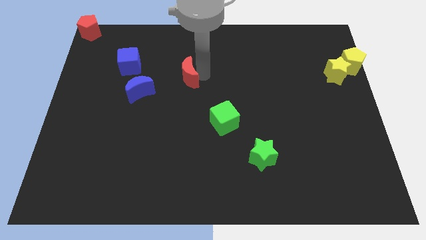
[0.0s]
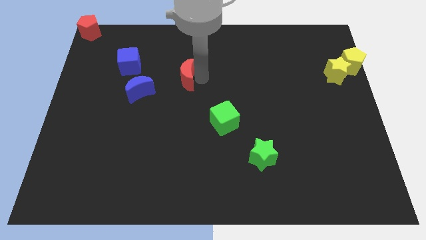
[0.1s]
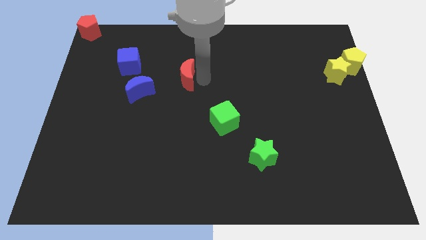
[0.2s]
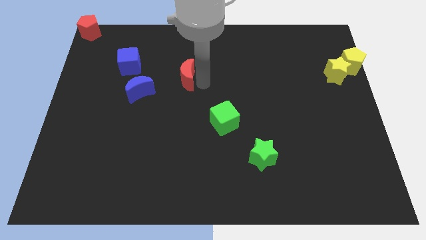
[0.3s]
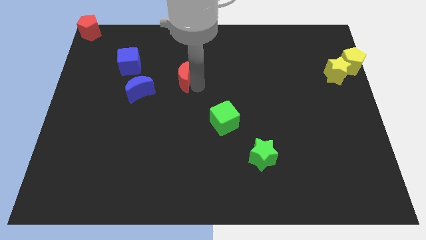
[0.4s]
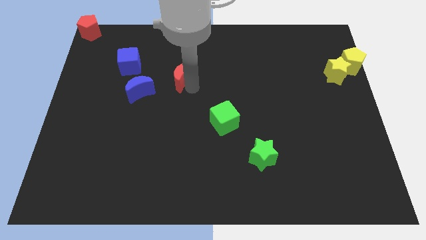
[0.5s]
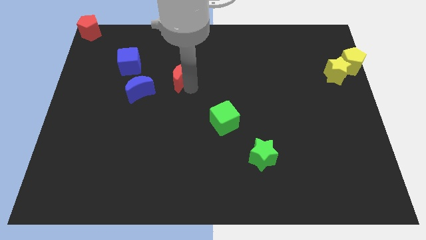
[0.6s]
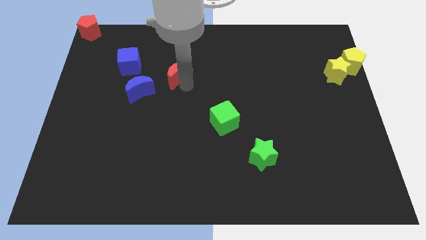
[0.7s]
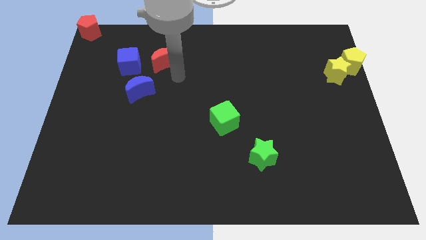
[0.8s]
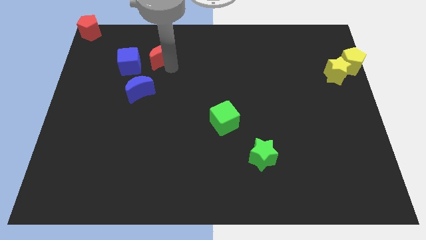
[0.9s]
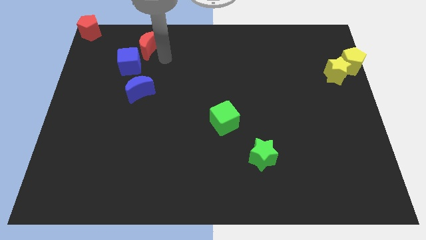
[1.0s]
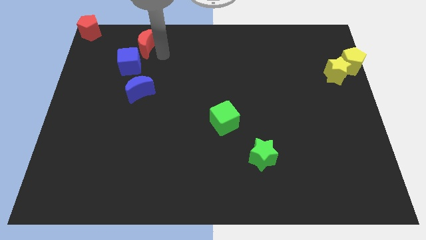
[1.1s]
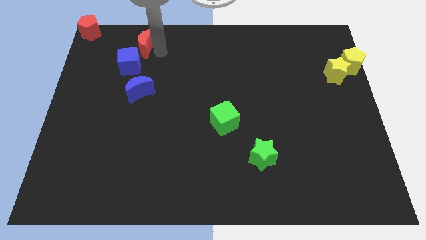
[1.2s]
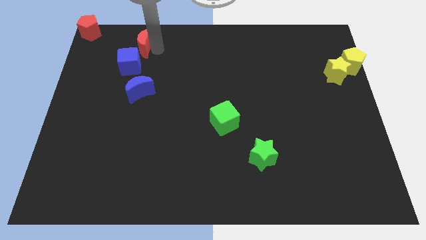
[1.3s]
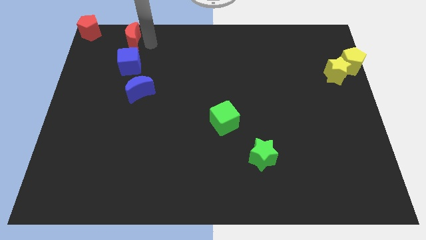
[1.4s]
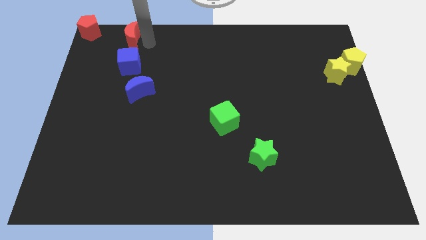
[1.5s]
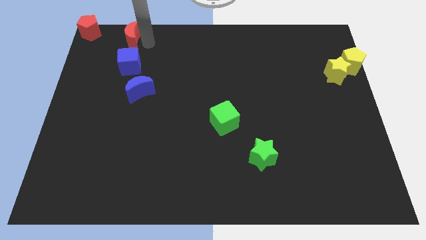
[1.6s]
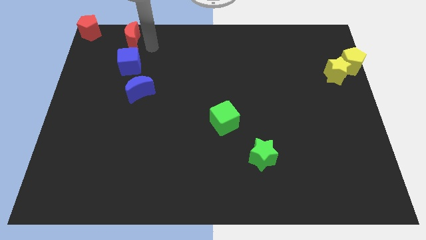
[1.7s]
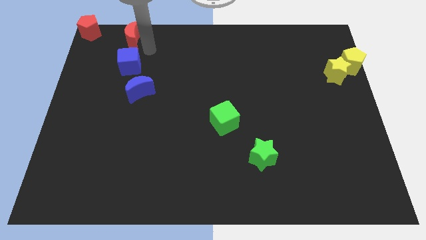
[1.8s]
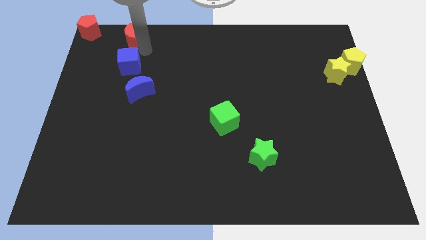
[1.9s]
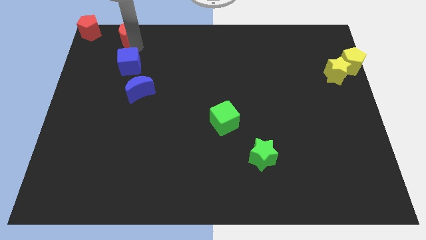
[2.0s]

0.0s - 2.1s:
place the red crescent at top of the blue cube

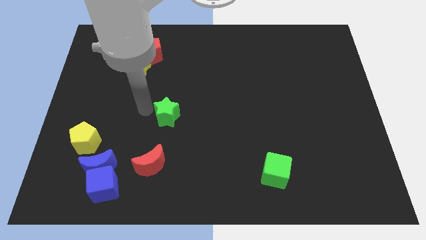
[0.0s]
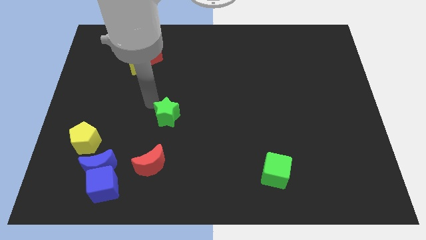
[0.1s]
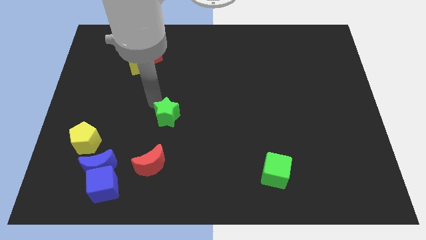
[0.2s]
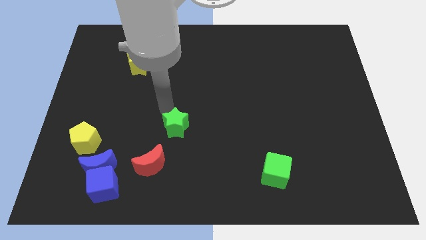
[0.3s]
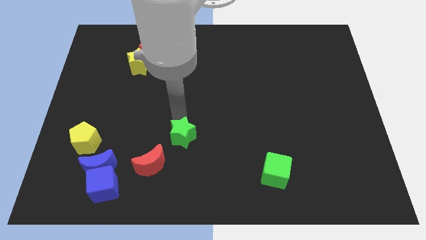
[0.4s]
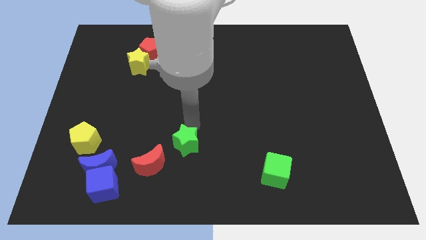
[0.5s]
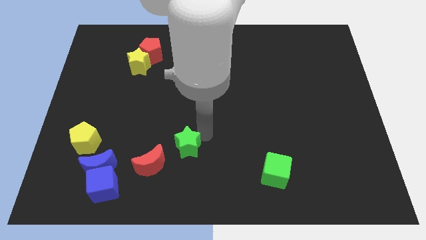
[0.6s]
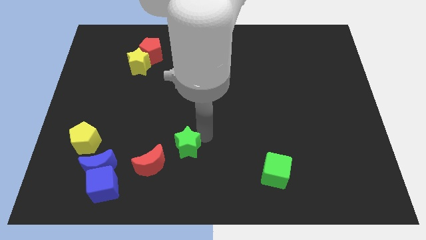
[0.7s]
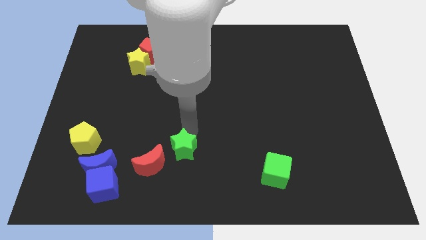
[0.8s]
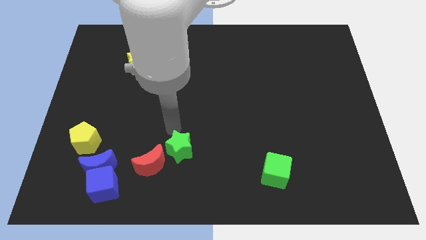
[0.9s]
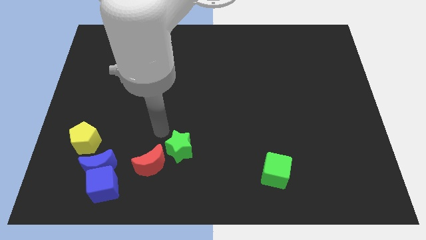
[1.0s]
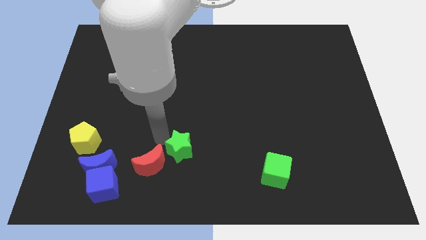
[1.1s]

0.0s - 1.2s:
move the green star to the right side of the red crescent

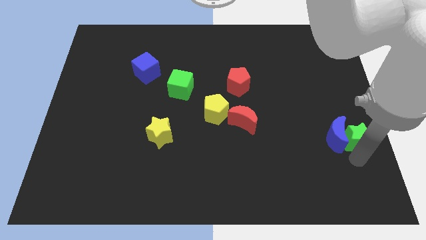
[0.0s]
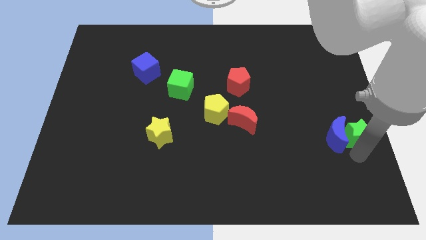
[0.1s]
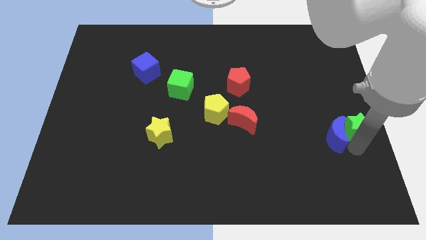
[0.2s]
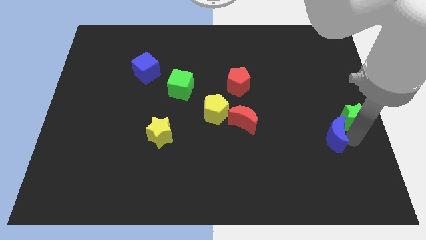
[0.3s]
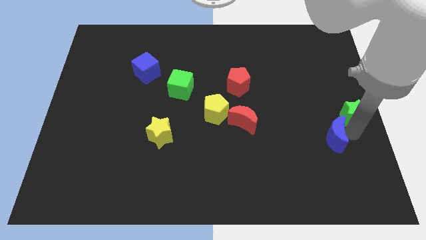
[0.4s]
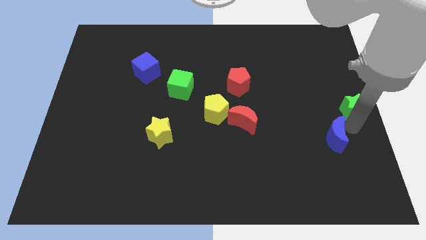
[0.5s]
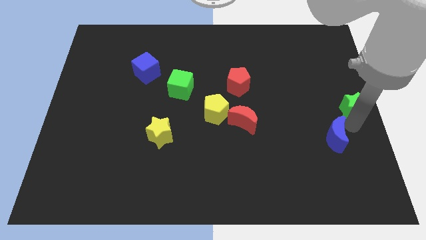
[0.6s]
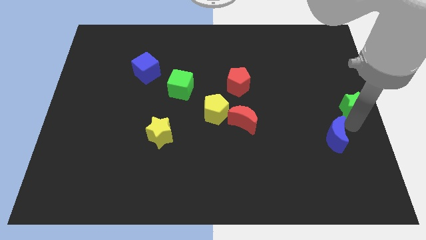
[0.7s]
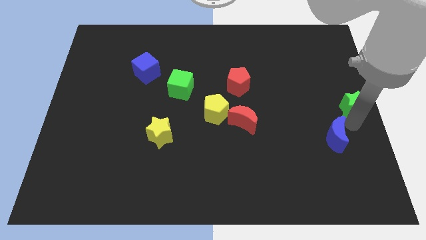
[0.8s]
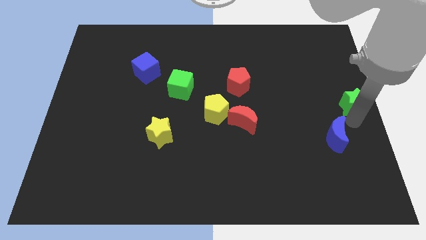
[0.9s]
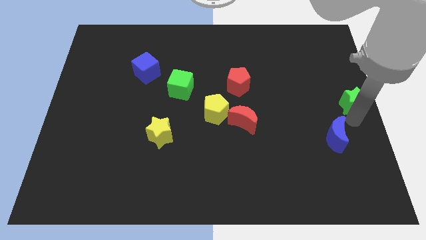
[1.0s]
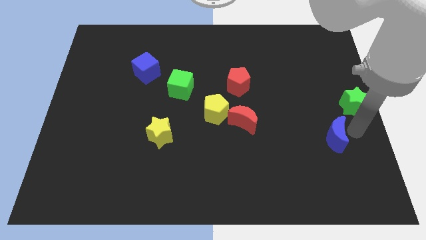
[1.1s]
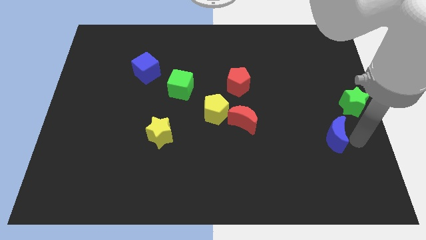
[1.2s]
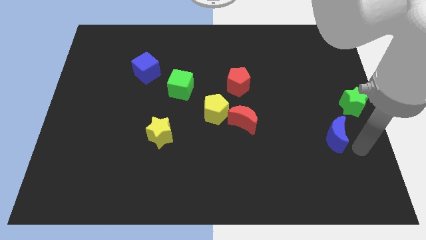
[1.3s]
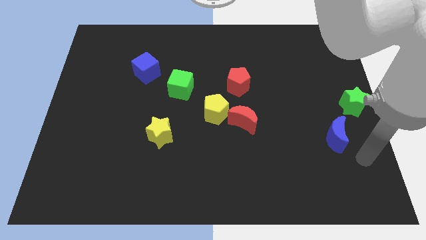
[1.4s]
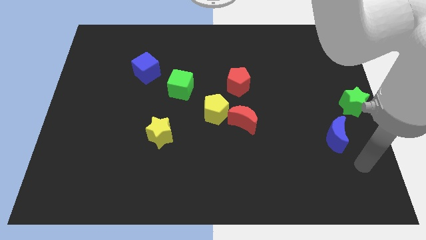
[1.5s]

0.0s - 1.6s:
move the green star to the right center of the board

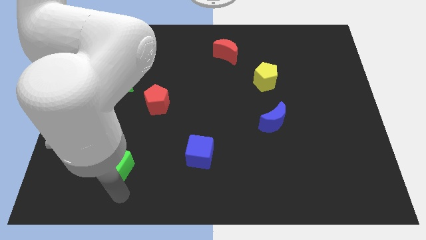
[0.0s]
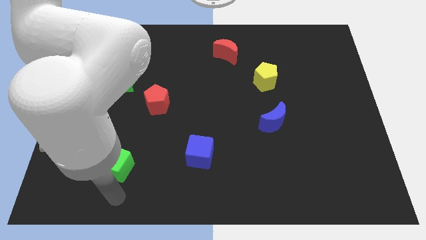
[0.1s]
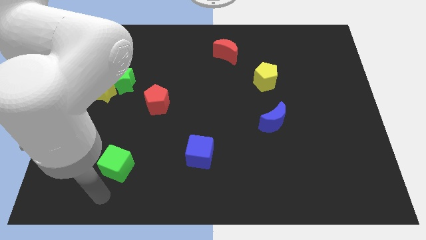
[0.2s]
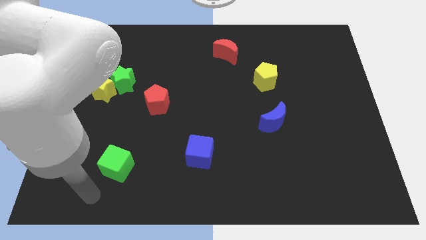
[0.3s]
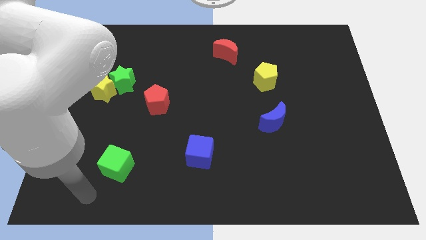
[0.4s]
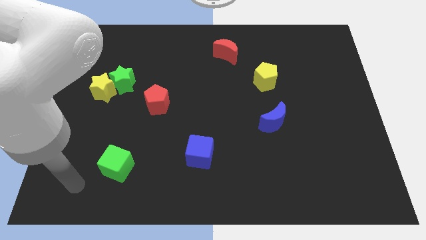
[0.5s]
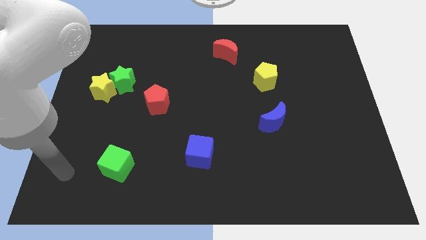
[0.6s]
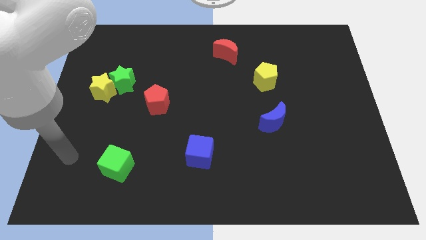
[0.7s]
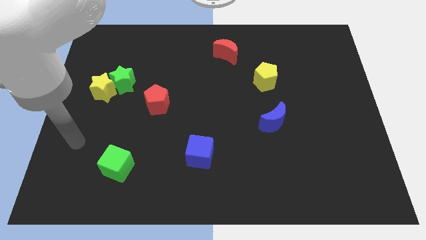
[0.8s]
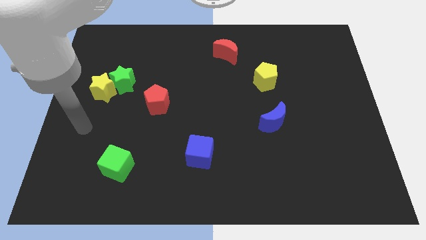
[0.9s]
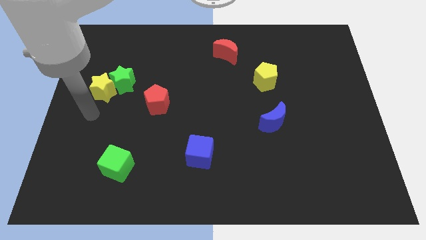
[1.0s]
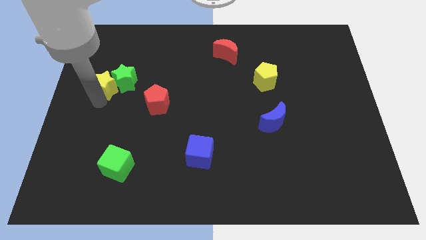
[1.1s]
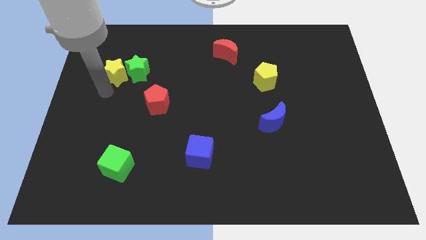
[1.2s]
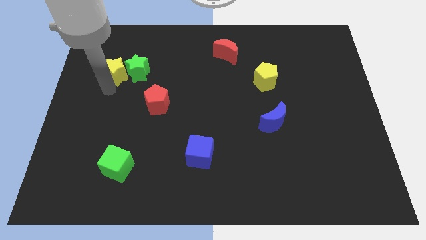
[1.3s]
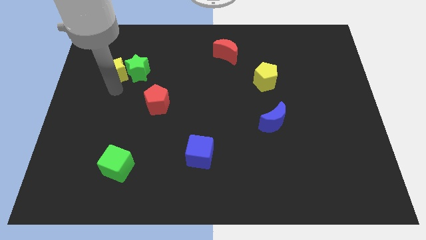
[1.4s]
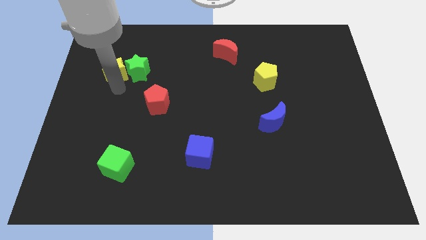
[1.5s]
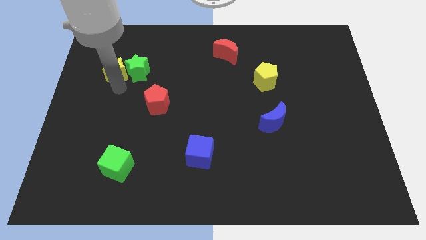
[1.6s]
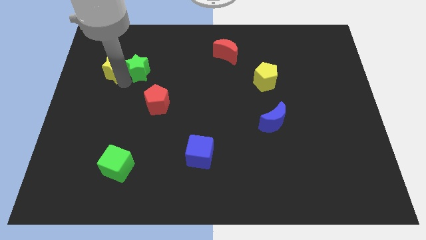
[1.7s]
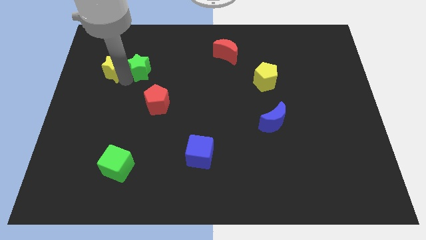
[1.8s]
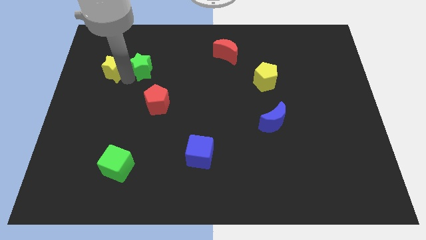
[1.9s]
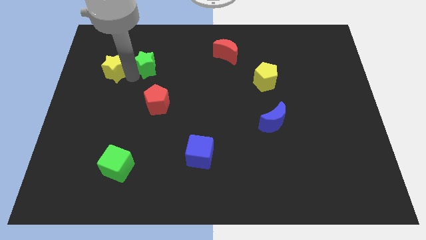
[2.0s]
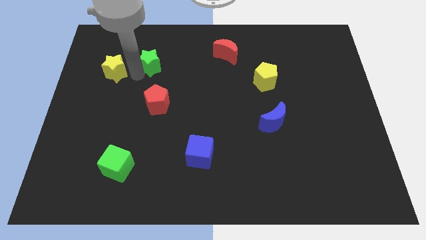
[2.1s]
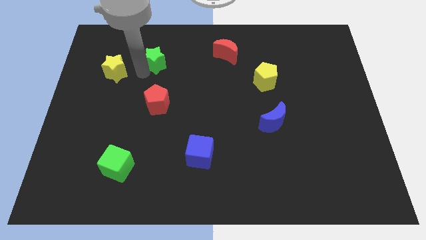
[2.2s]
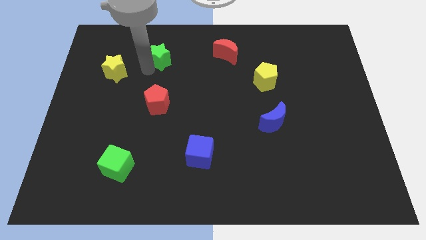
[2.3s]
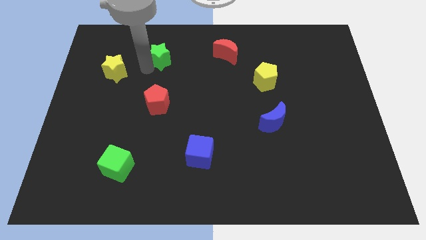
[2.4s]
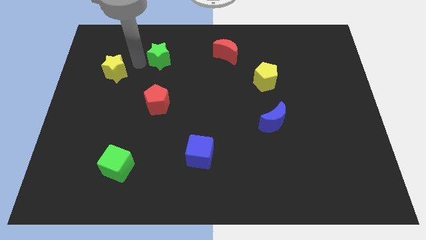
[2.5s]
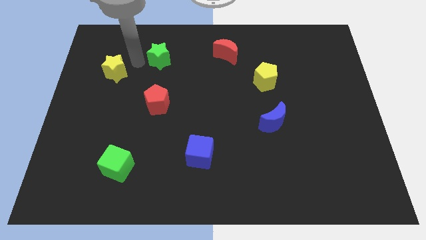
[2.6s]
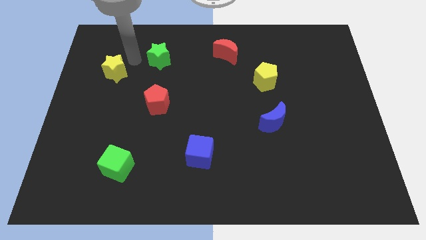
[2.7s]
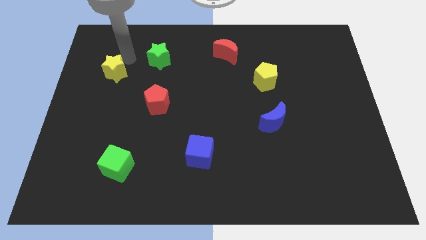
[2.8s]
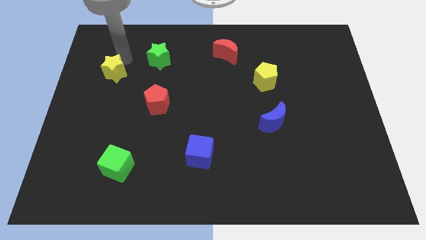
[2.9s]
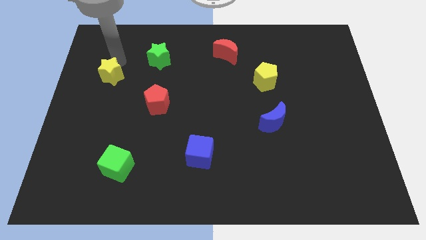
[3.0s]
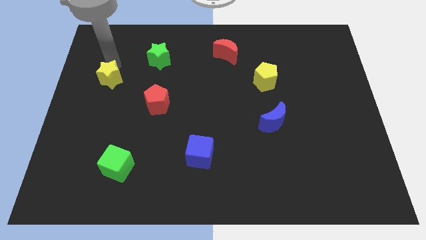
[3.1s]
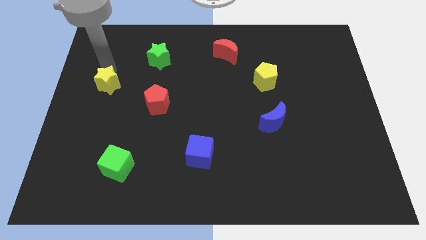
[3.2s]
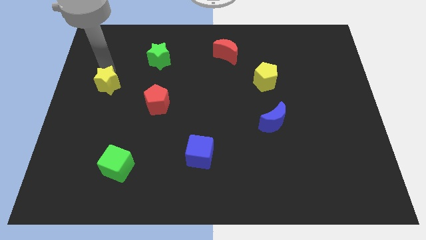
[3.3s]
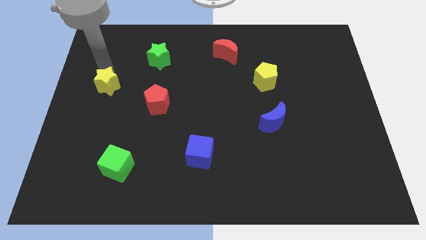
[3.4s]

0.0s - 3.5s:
separate the yellow and green stars

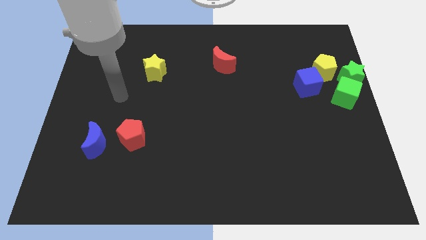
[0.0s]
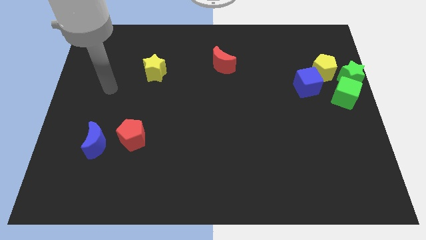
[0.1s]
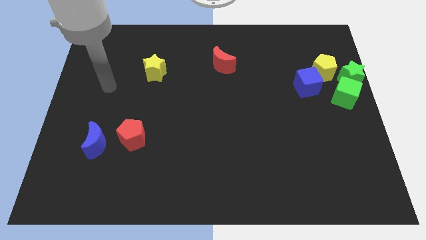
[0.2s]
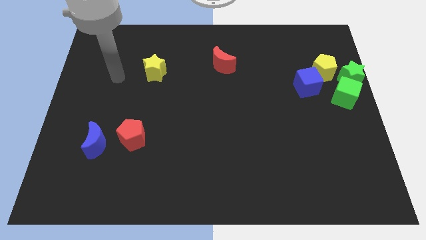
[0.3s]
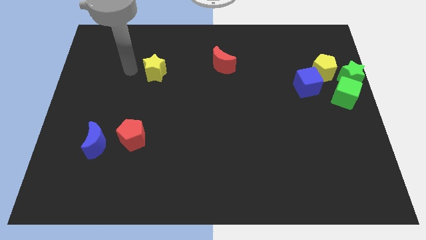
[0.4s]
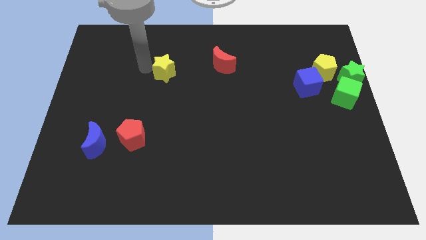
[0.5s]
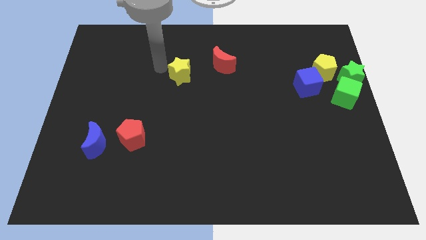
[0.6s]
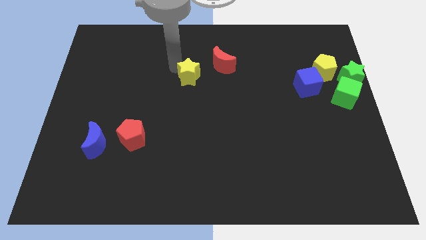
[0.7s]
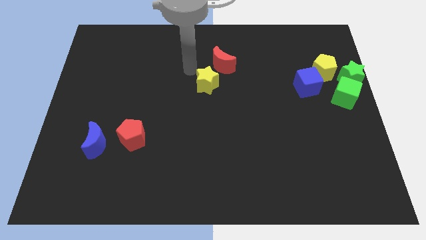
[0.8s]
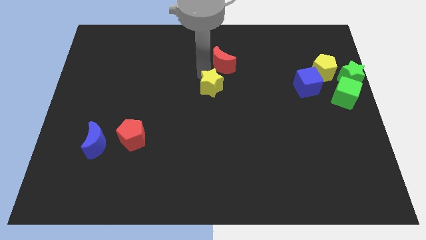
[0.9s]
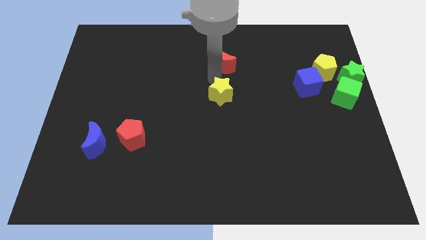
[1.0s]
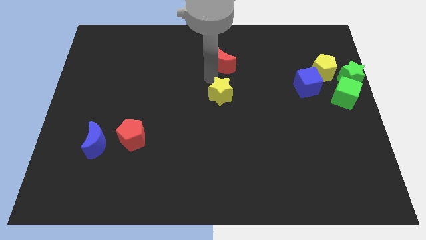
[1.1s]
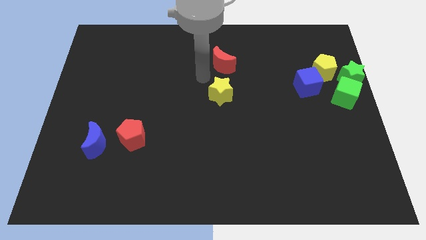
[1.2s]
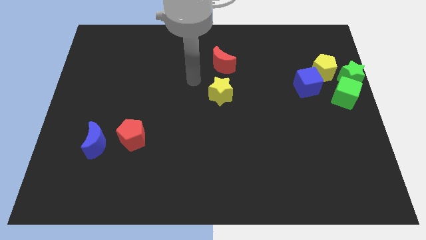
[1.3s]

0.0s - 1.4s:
place the yellow star down to the red moon
